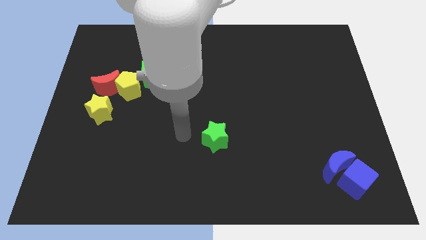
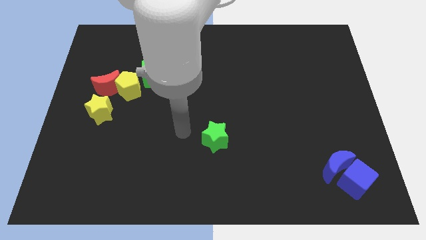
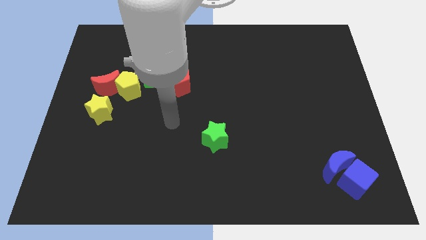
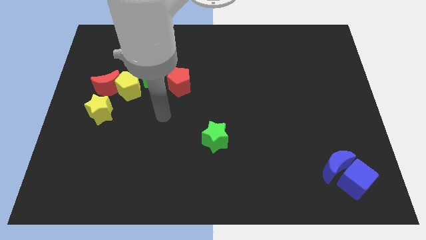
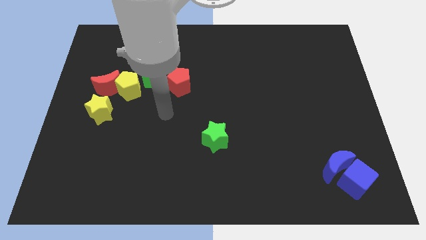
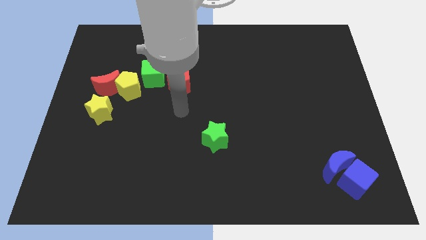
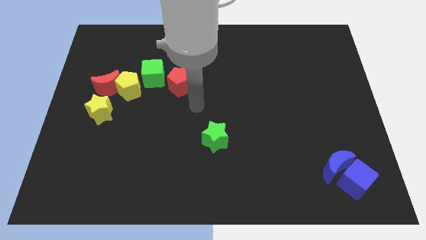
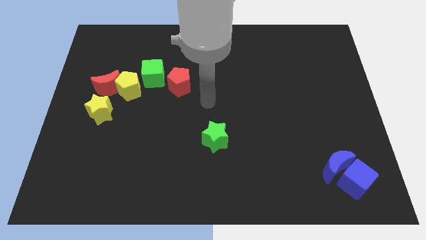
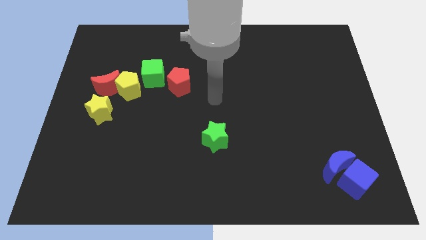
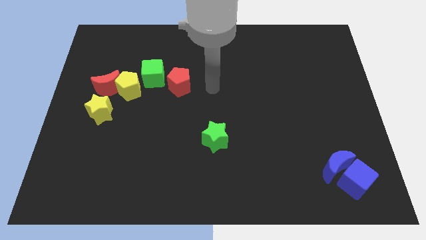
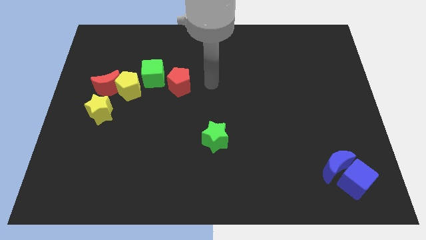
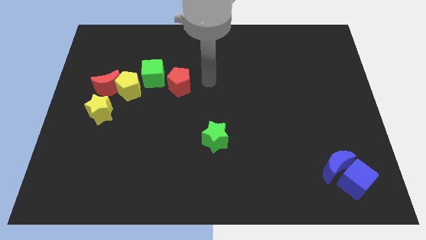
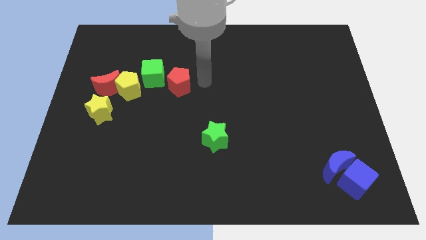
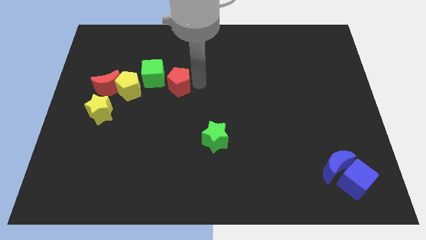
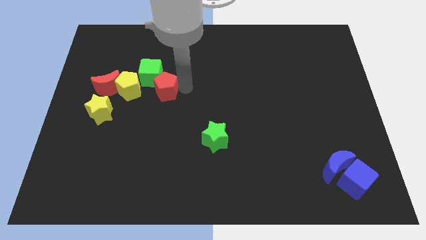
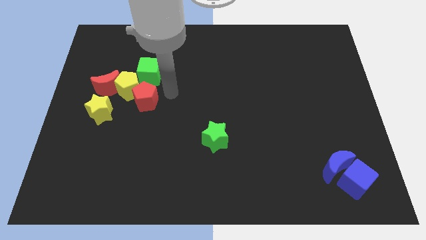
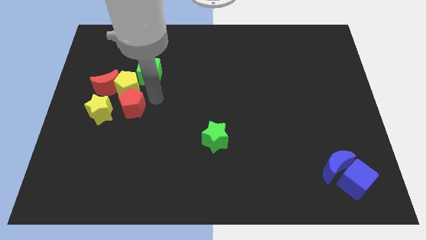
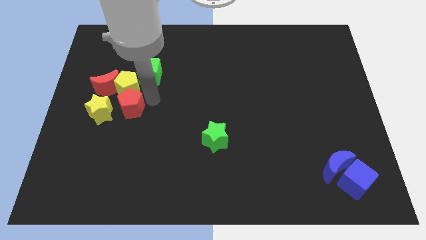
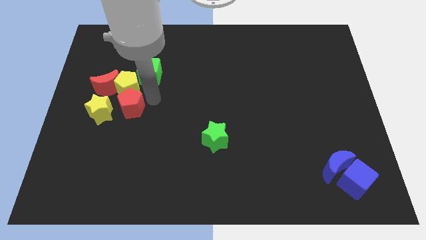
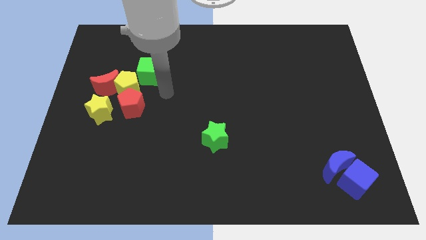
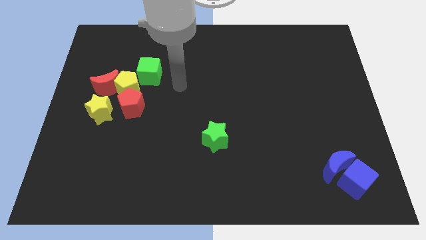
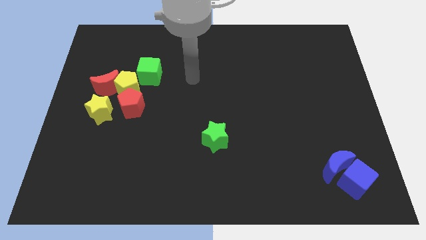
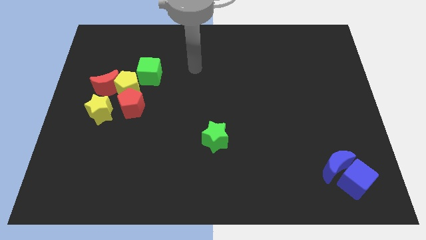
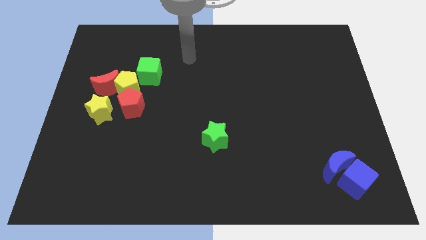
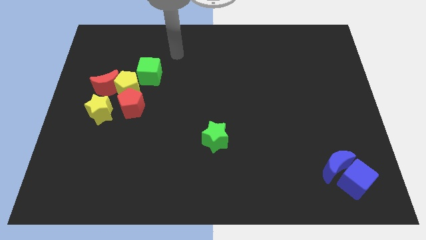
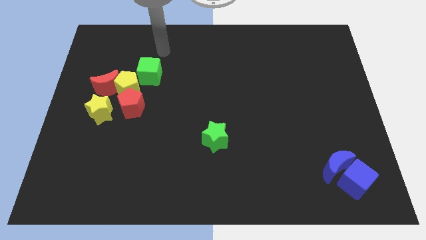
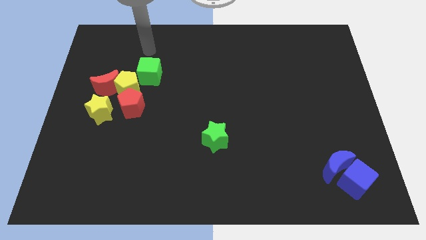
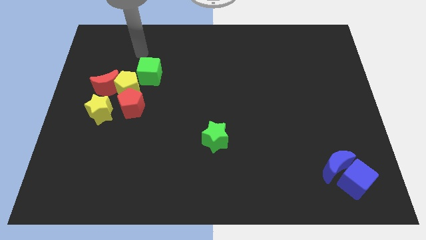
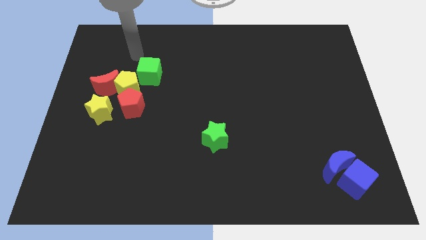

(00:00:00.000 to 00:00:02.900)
move red pentagon below the yellow pentagon

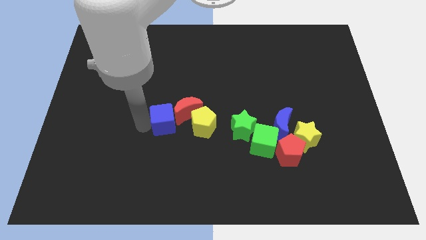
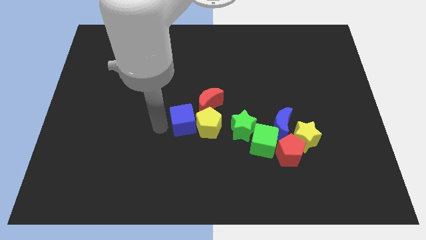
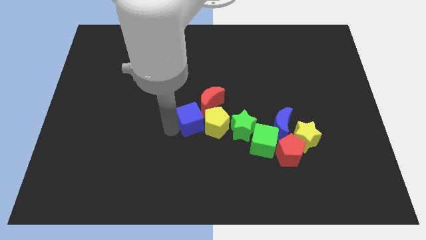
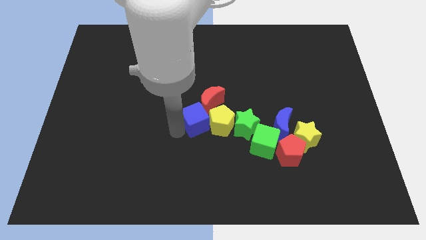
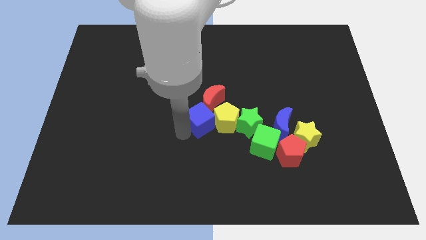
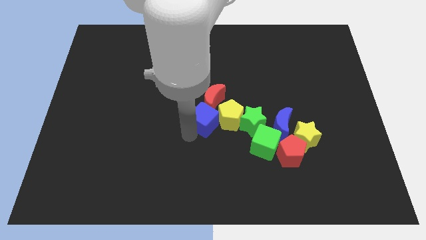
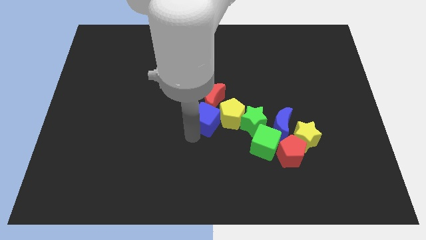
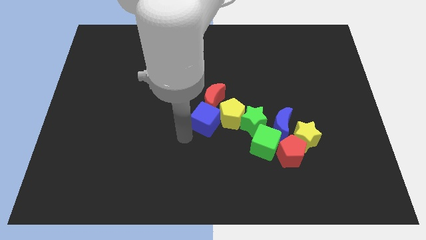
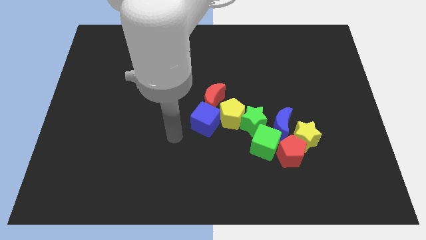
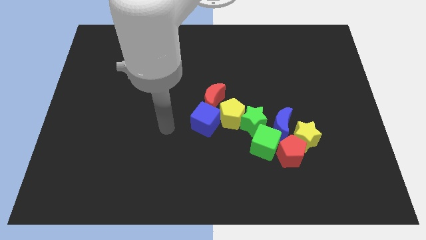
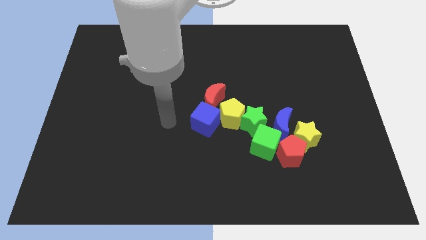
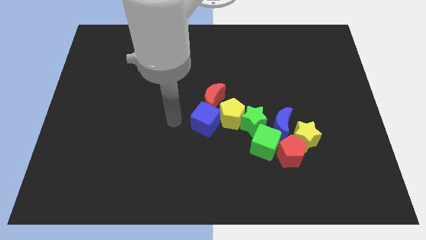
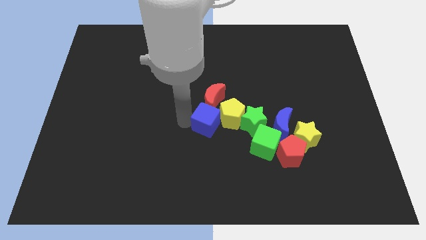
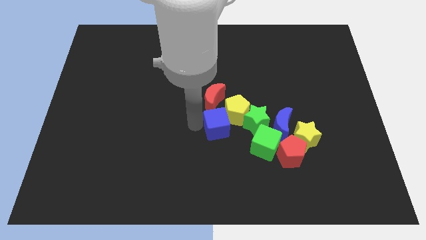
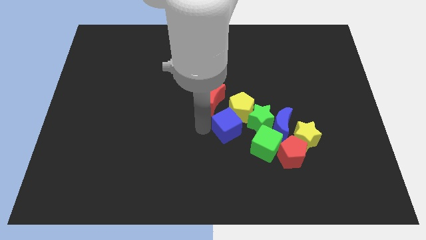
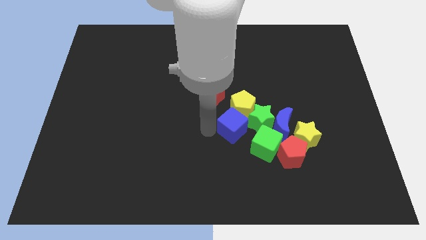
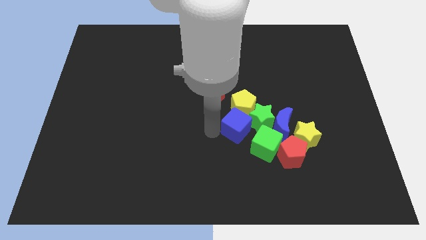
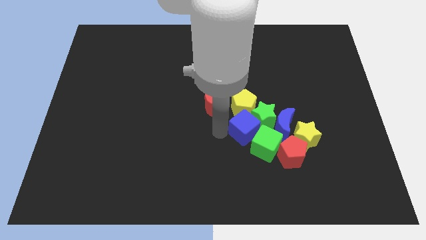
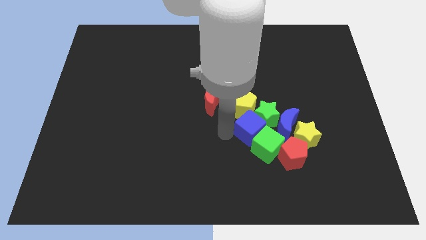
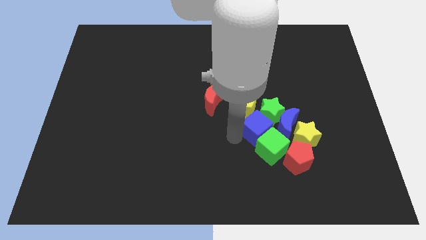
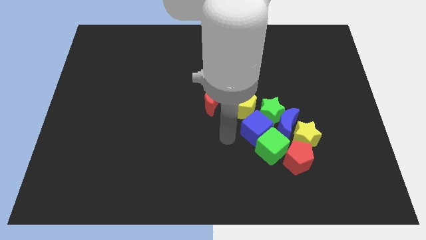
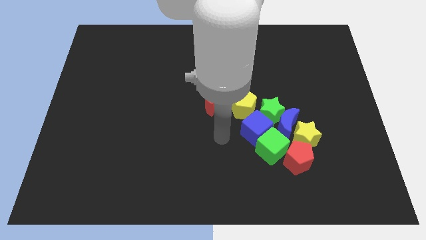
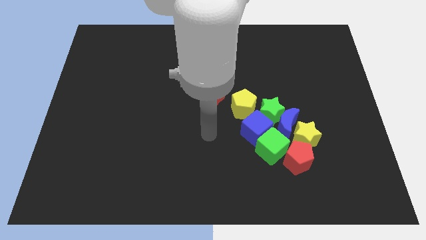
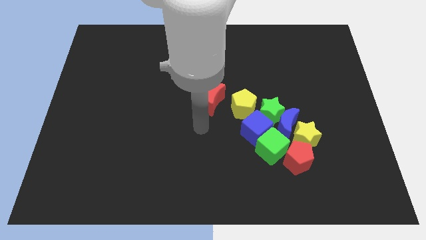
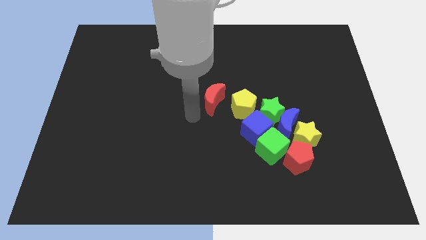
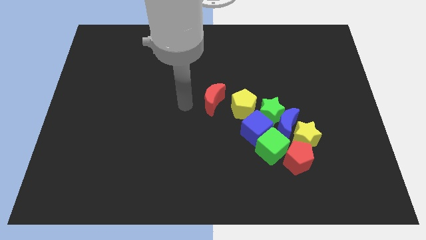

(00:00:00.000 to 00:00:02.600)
move the blue cube left to blue crescent

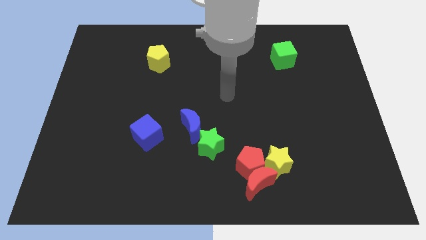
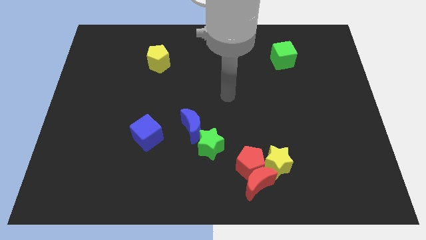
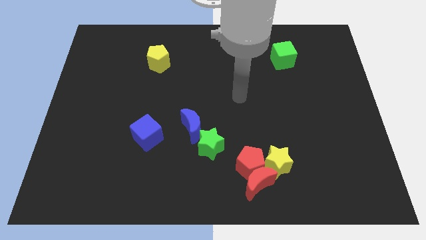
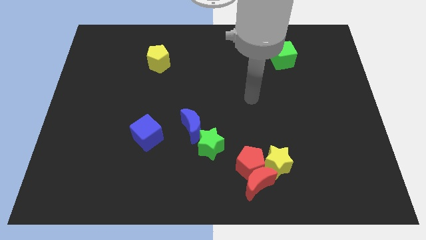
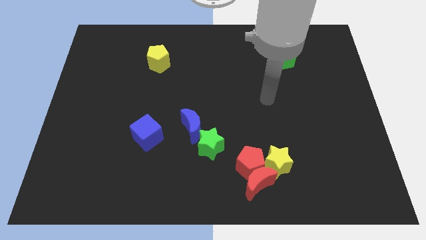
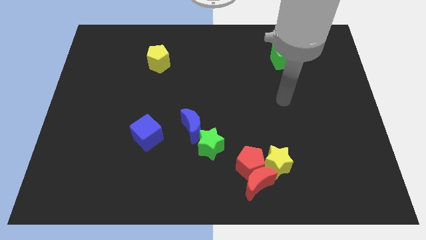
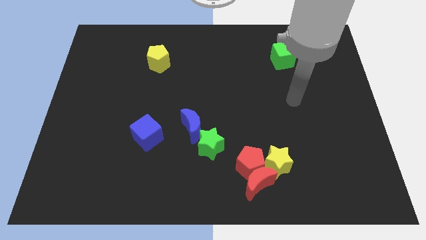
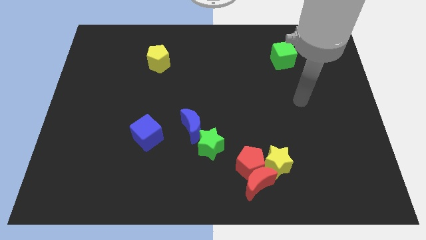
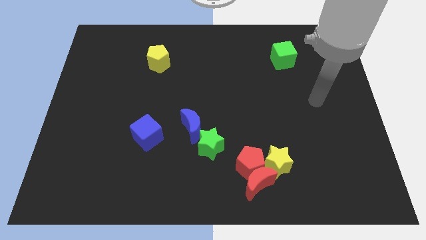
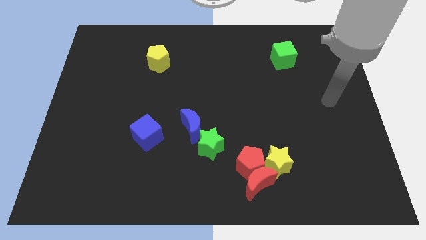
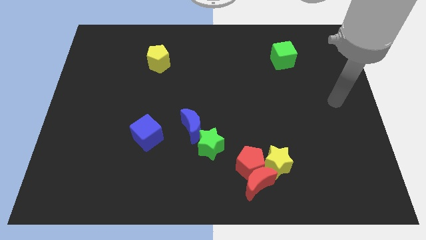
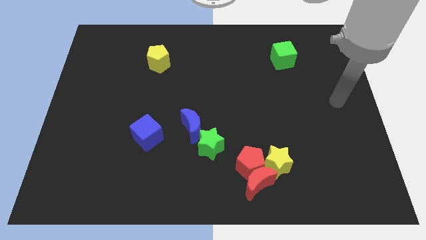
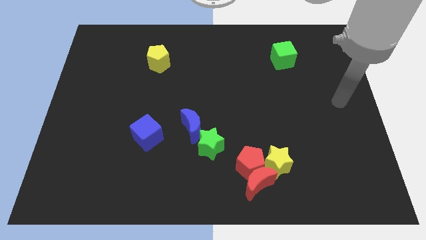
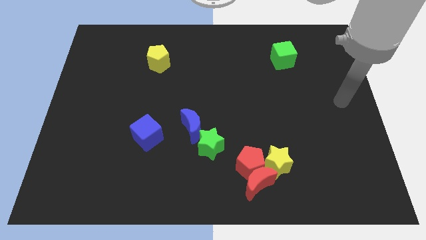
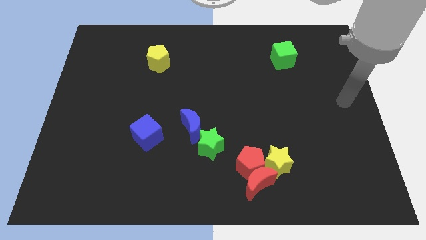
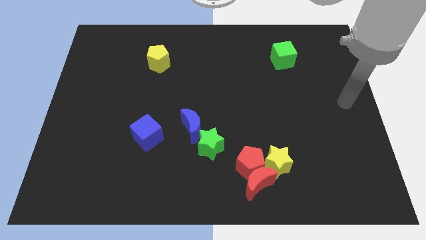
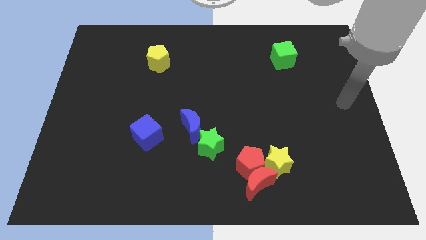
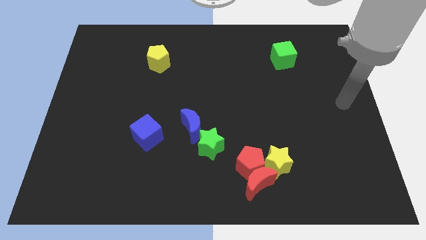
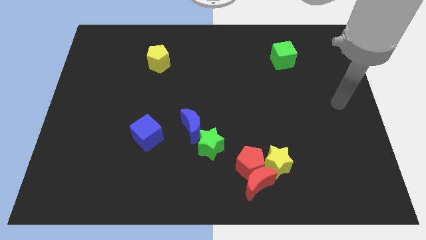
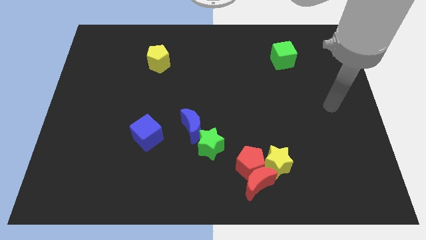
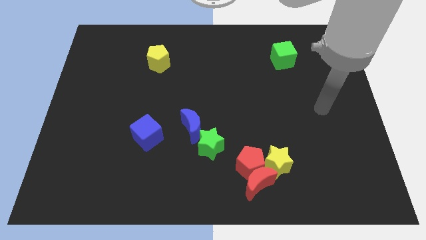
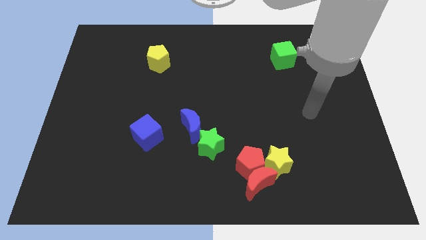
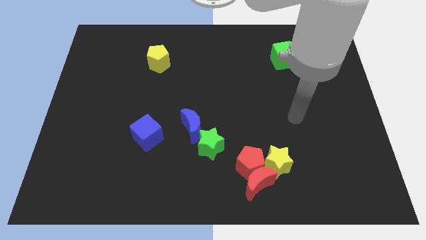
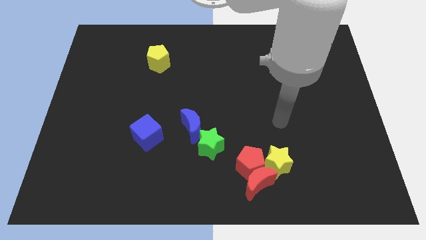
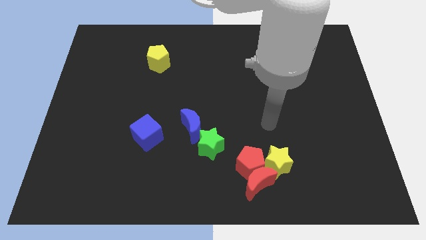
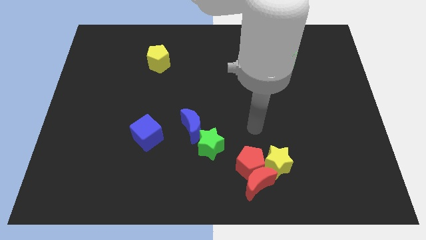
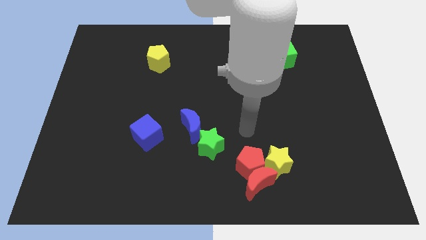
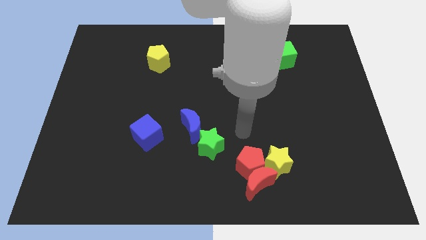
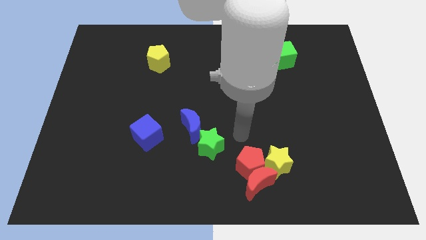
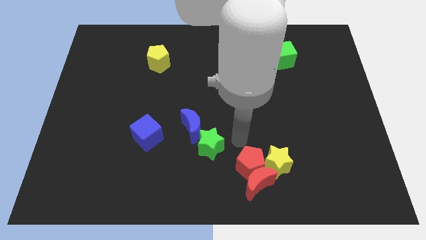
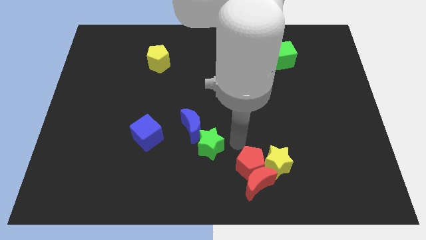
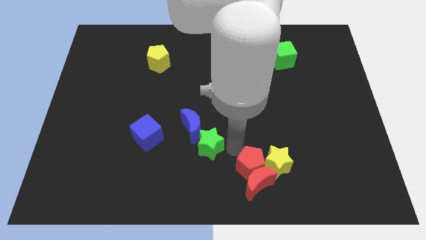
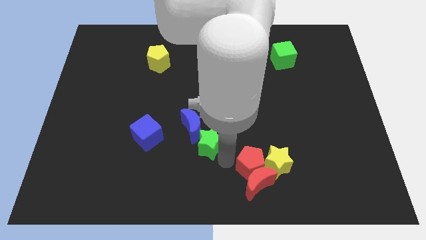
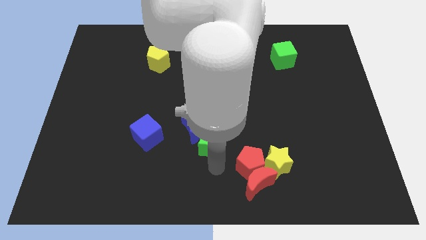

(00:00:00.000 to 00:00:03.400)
place your arm in between the green star and the red crescent
